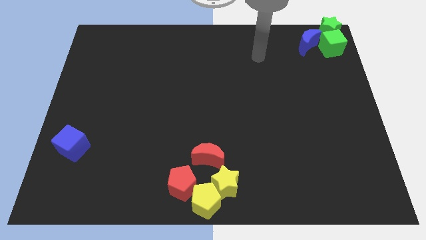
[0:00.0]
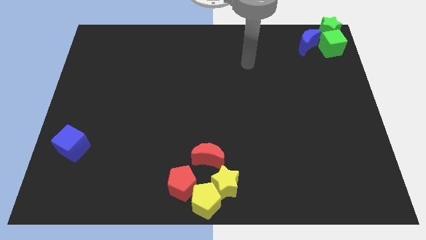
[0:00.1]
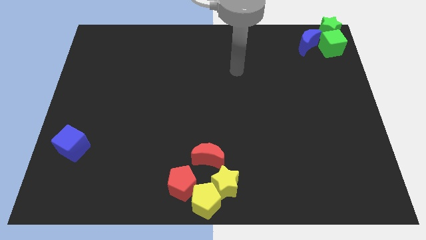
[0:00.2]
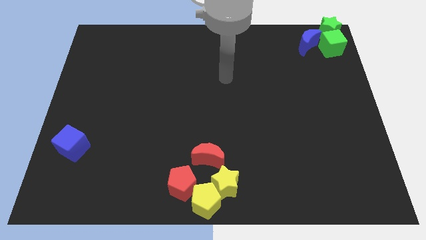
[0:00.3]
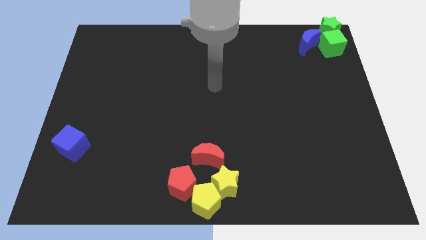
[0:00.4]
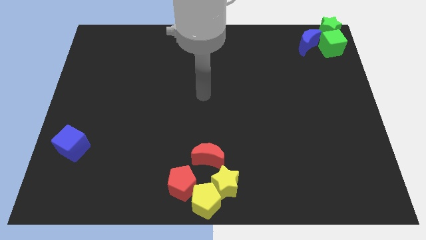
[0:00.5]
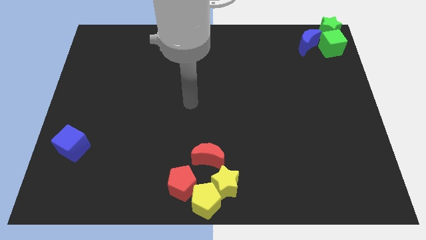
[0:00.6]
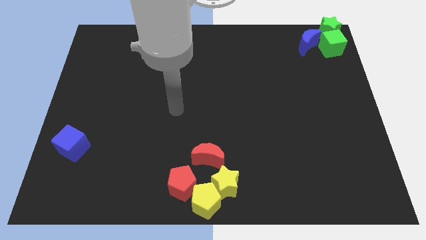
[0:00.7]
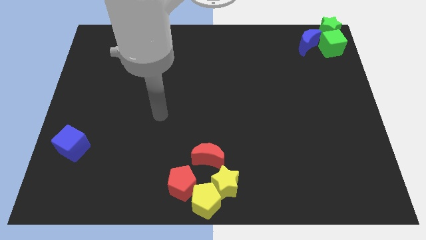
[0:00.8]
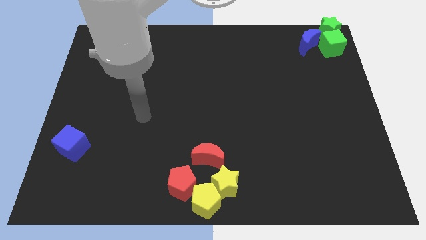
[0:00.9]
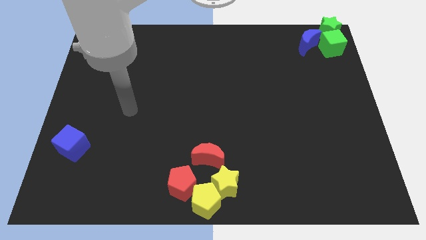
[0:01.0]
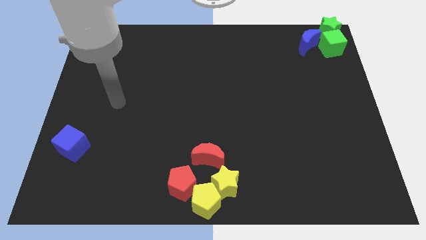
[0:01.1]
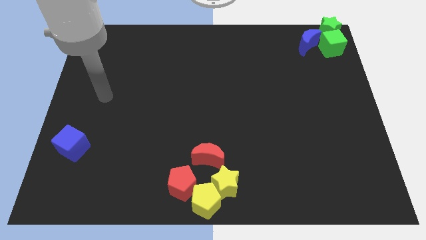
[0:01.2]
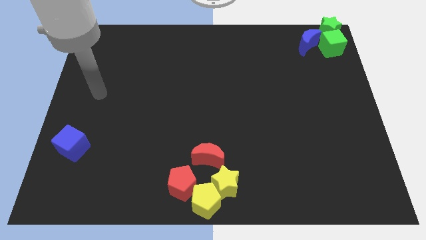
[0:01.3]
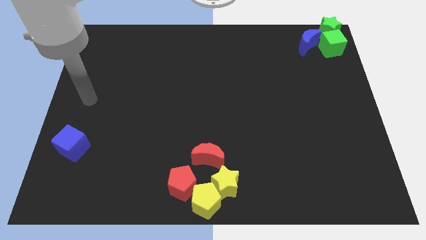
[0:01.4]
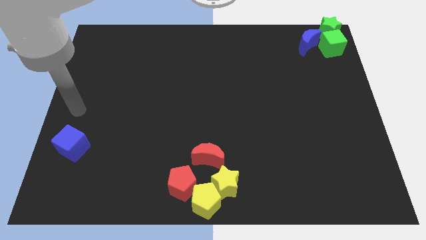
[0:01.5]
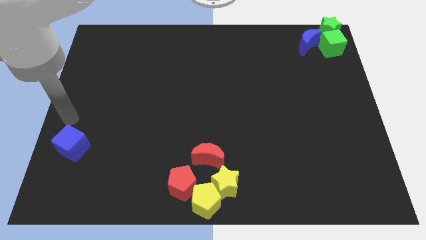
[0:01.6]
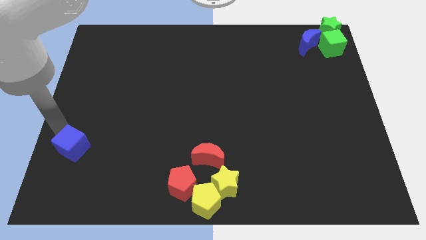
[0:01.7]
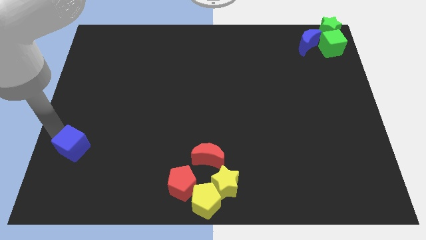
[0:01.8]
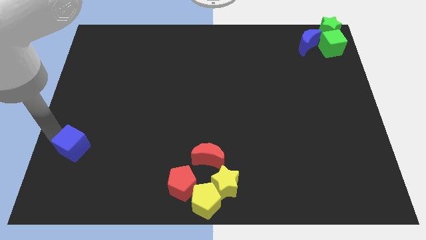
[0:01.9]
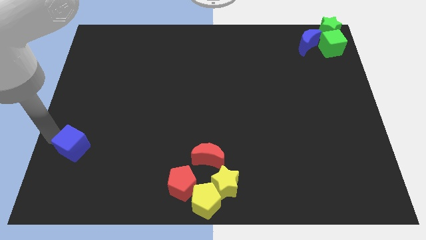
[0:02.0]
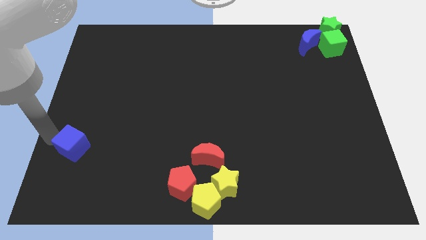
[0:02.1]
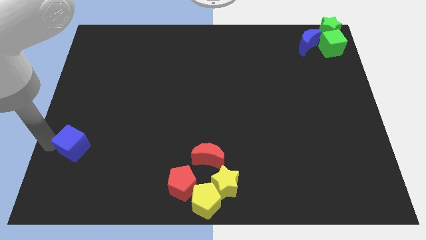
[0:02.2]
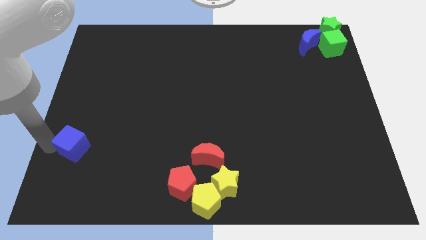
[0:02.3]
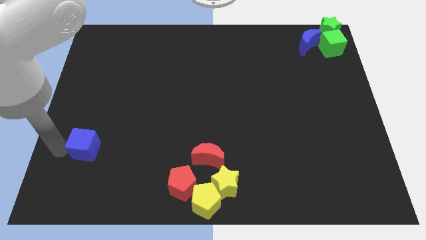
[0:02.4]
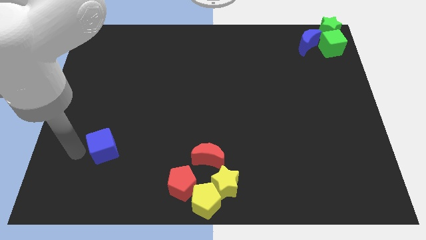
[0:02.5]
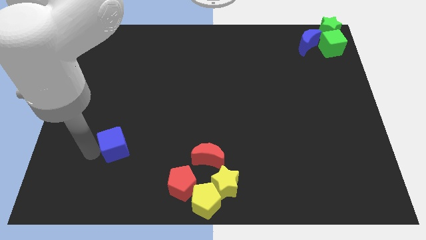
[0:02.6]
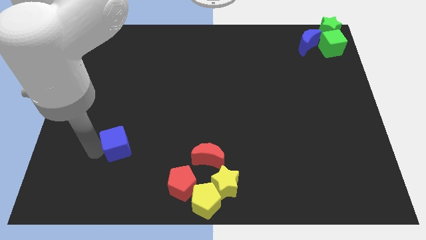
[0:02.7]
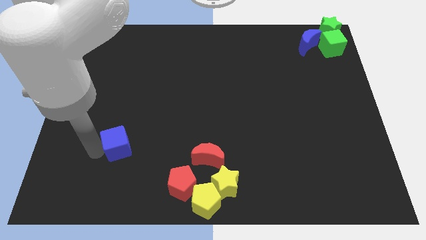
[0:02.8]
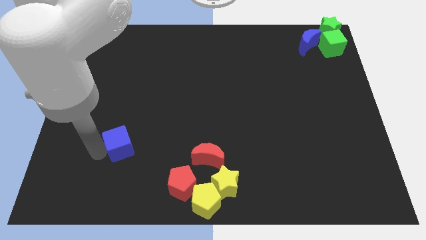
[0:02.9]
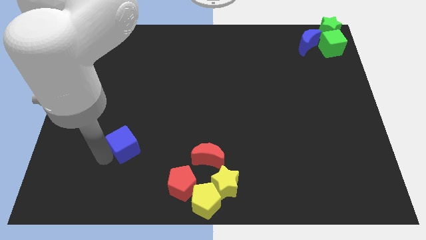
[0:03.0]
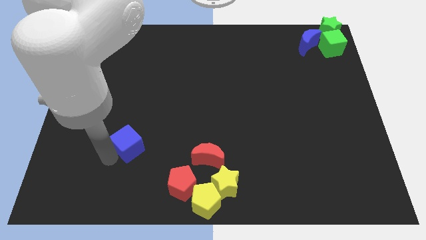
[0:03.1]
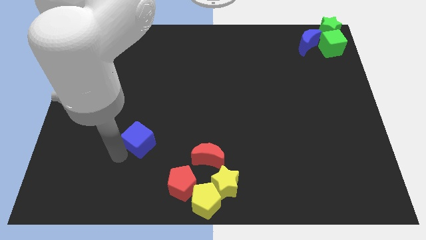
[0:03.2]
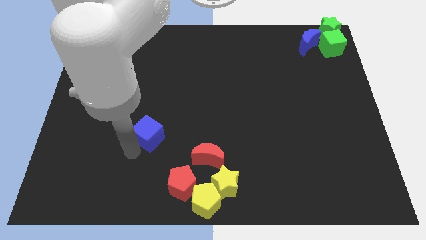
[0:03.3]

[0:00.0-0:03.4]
put the blue cube at the top left side of the red pentagon

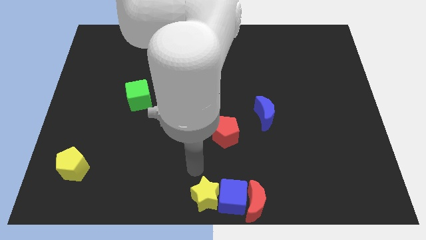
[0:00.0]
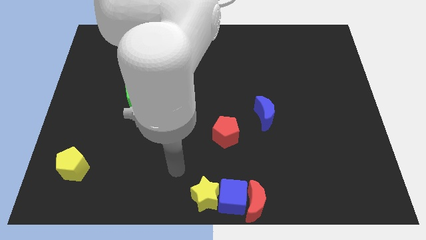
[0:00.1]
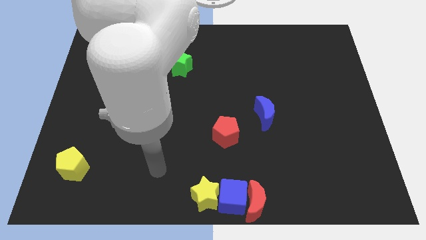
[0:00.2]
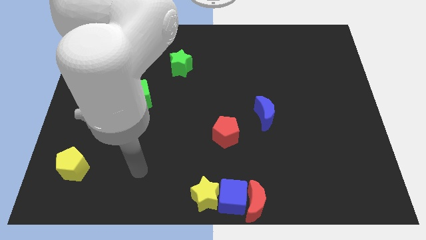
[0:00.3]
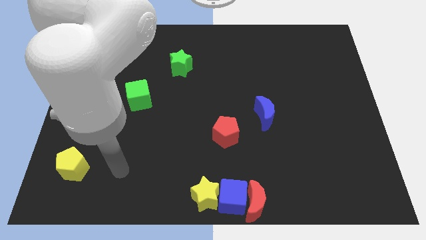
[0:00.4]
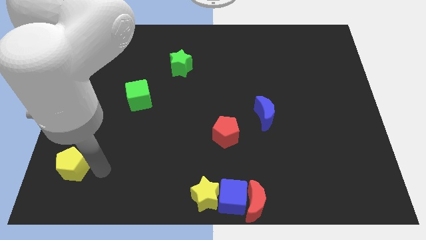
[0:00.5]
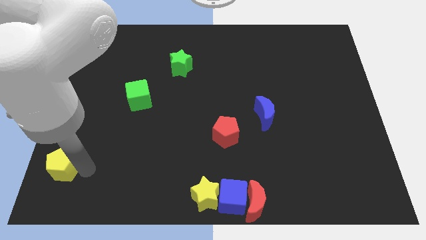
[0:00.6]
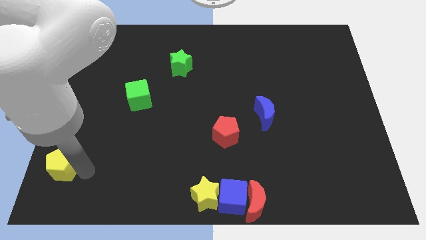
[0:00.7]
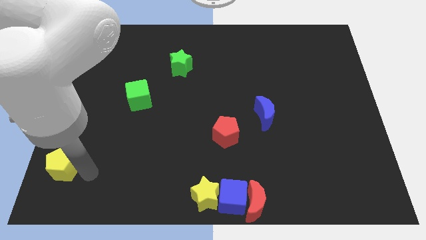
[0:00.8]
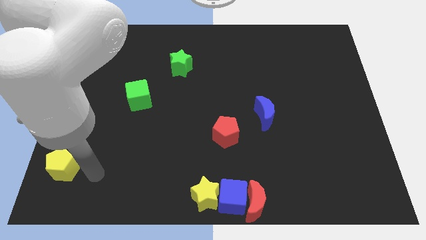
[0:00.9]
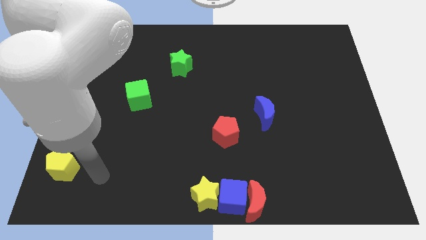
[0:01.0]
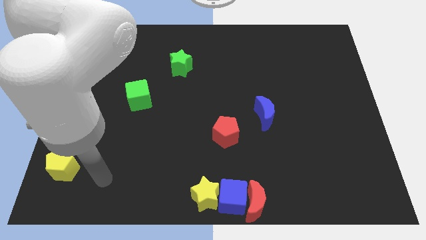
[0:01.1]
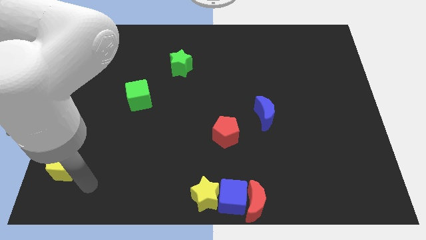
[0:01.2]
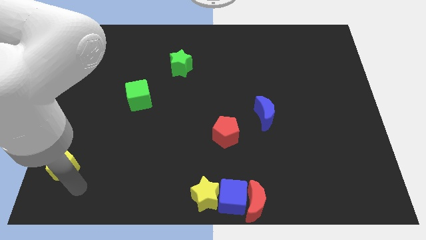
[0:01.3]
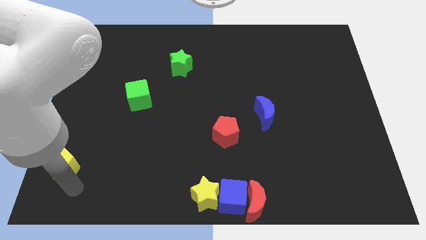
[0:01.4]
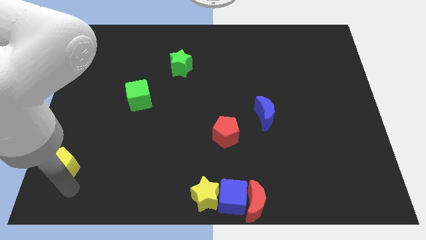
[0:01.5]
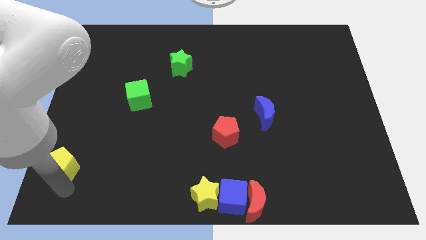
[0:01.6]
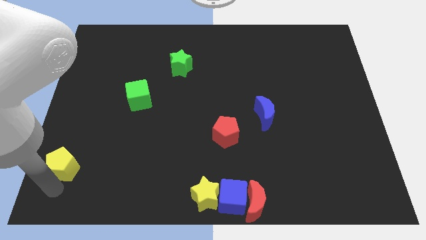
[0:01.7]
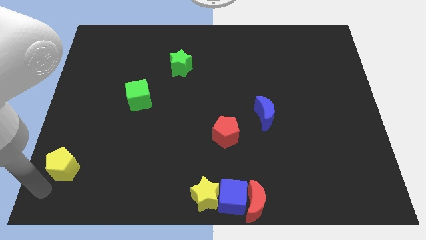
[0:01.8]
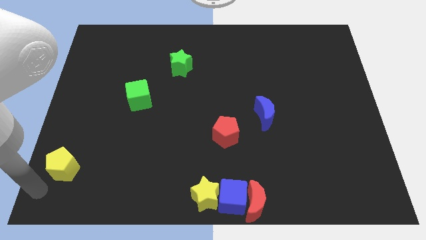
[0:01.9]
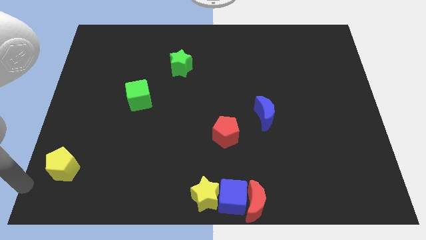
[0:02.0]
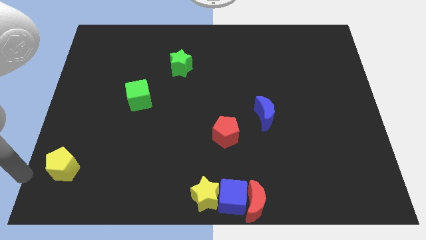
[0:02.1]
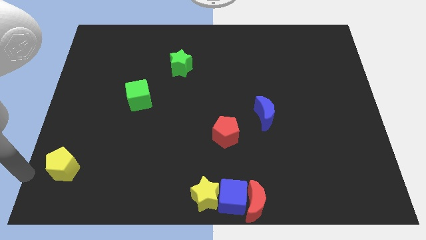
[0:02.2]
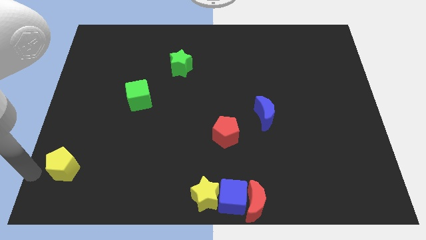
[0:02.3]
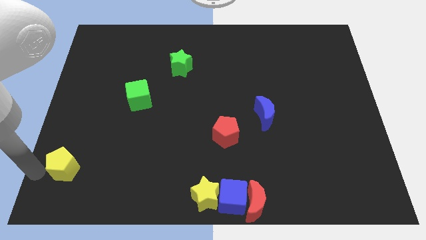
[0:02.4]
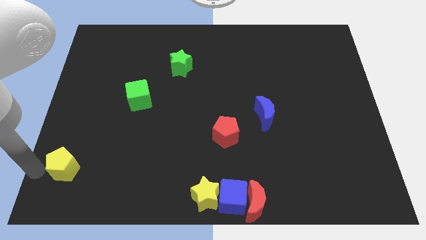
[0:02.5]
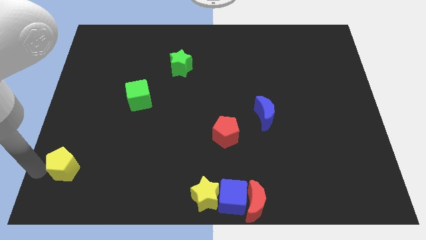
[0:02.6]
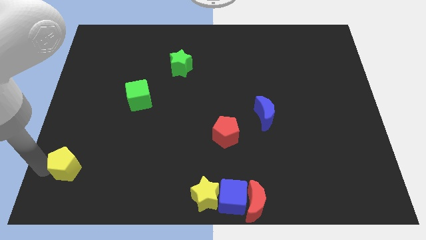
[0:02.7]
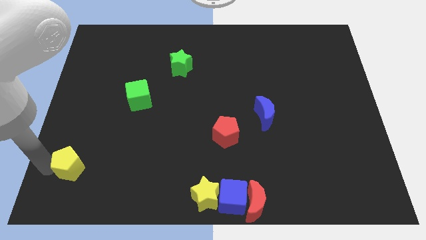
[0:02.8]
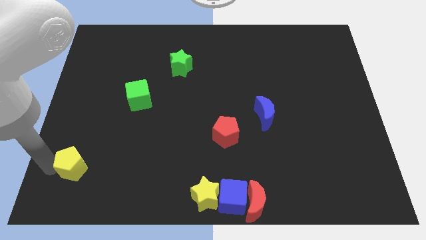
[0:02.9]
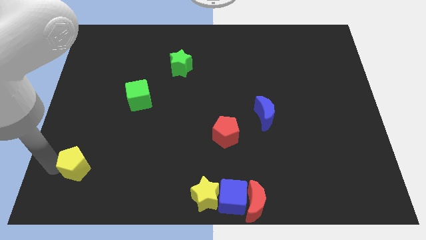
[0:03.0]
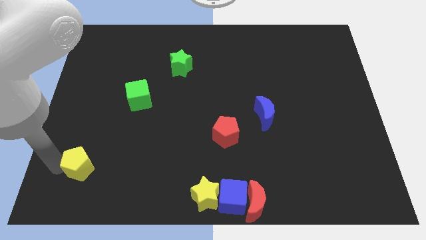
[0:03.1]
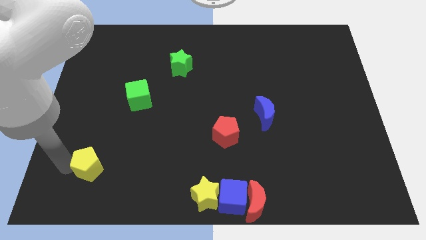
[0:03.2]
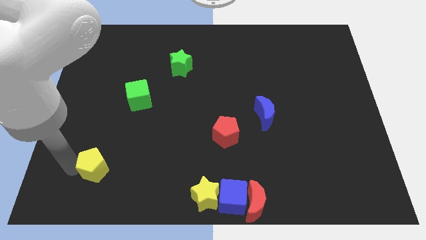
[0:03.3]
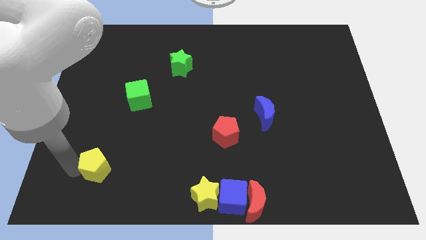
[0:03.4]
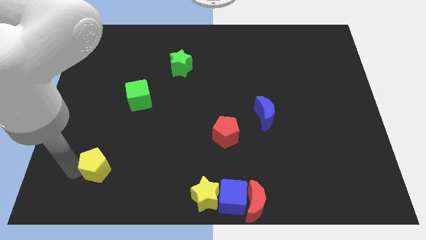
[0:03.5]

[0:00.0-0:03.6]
slide the yellow pentagon slightly to the right

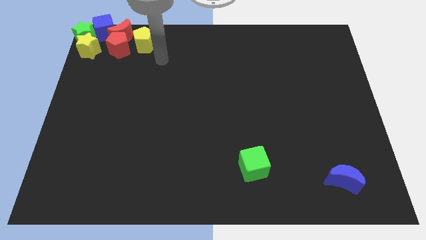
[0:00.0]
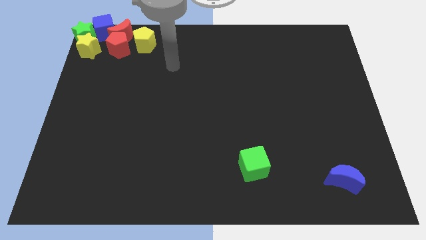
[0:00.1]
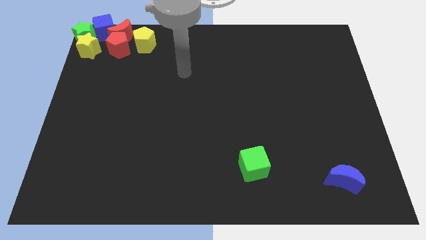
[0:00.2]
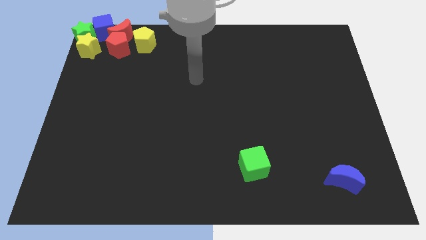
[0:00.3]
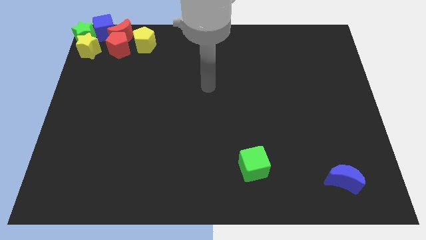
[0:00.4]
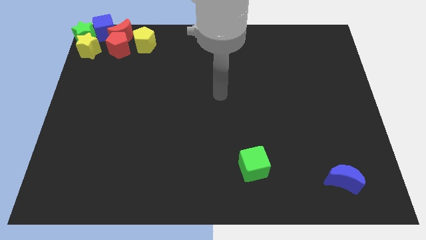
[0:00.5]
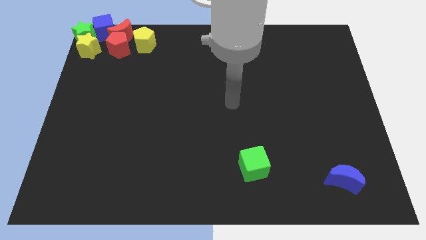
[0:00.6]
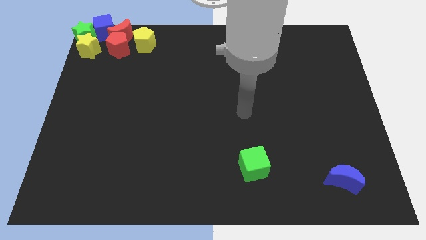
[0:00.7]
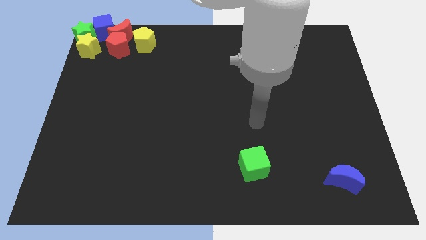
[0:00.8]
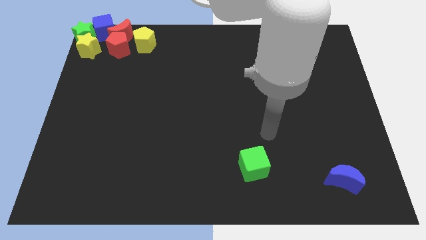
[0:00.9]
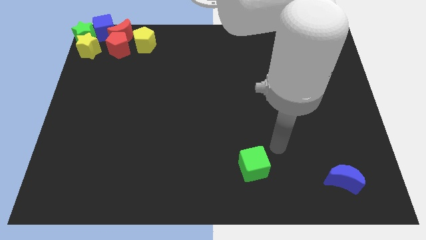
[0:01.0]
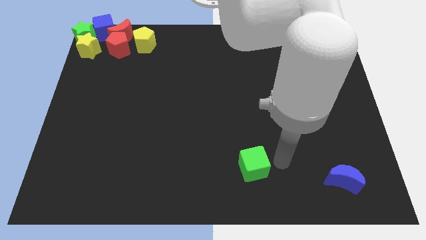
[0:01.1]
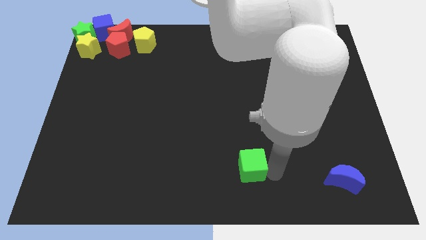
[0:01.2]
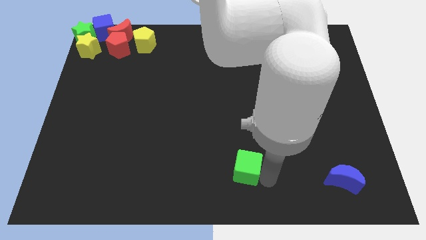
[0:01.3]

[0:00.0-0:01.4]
point your arm right to green cube

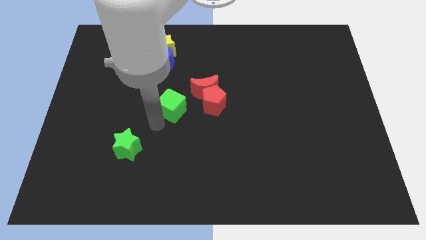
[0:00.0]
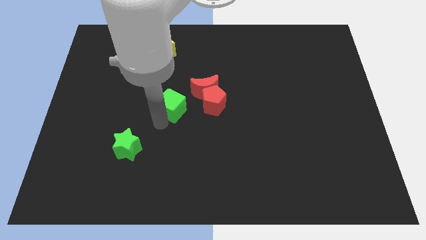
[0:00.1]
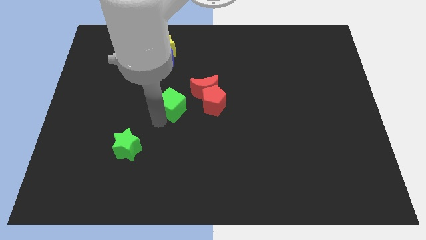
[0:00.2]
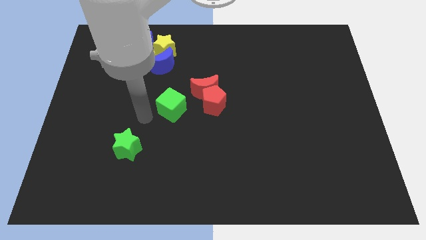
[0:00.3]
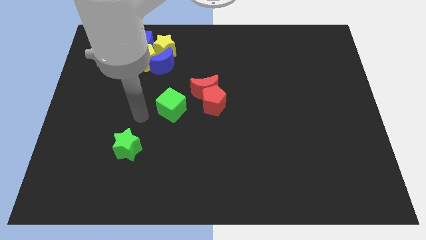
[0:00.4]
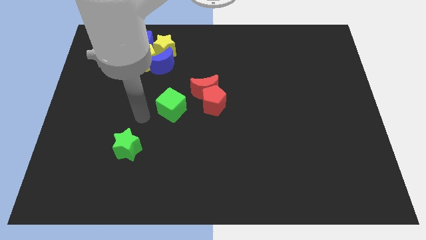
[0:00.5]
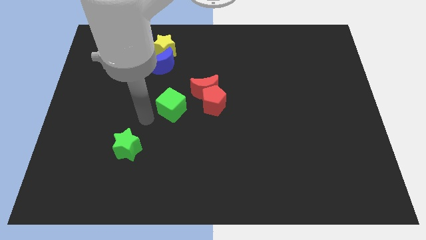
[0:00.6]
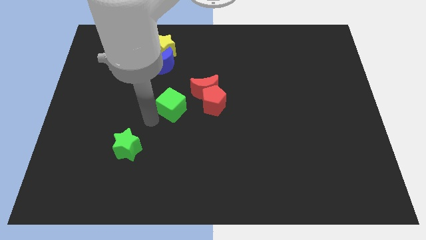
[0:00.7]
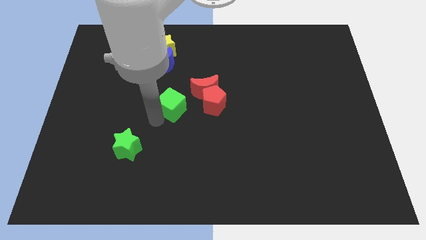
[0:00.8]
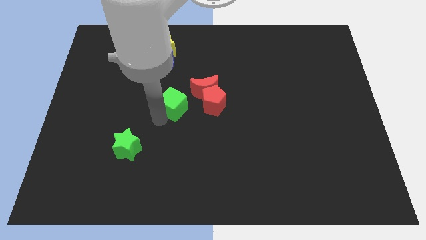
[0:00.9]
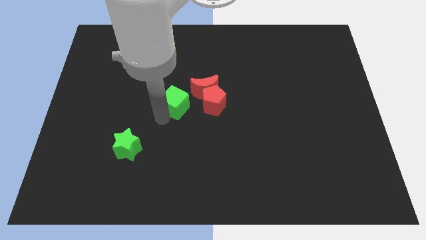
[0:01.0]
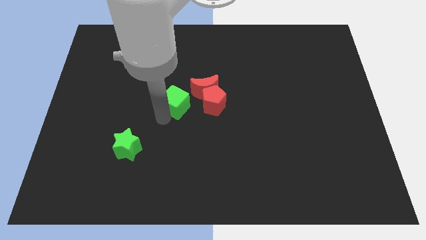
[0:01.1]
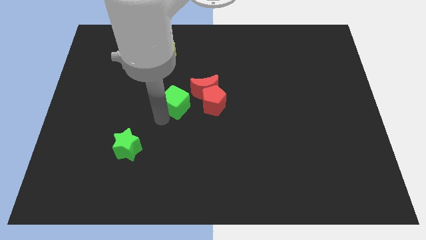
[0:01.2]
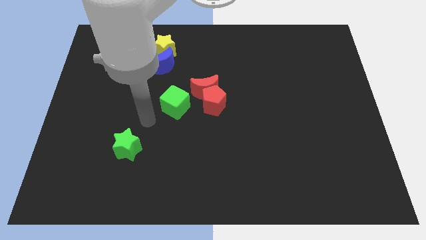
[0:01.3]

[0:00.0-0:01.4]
place the green cube on the lft side of the red blocks
